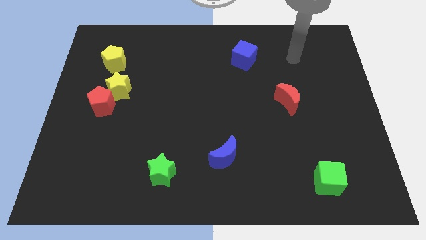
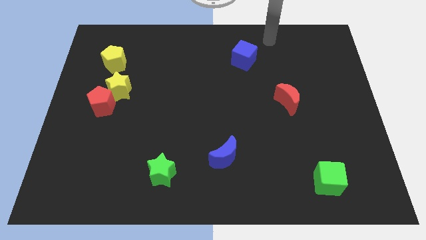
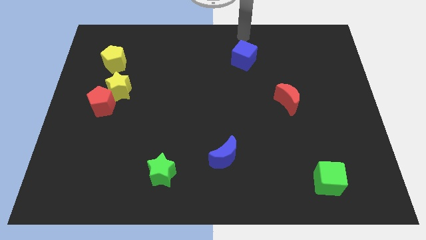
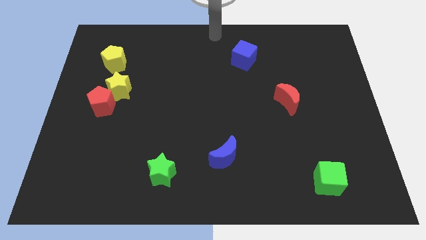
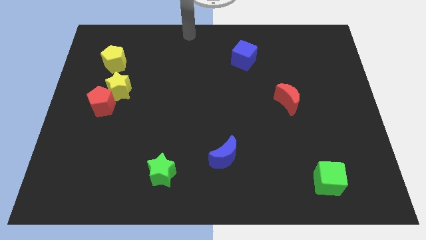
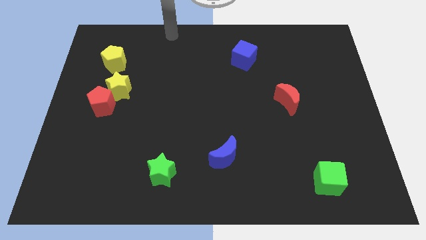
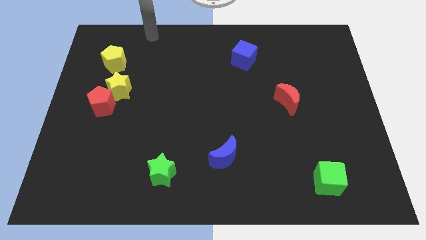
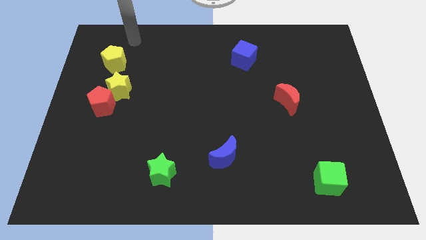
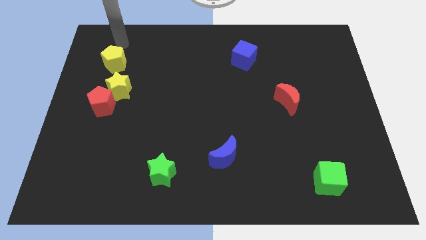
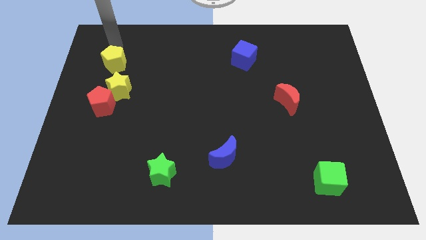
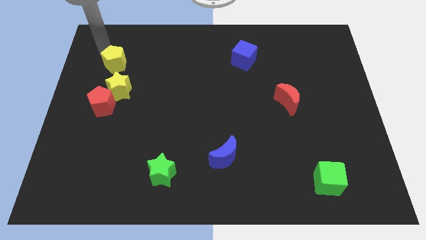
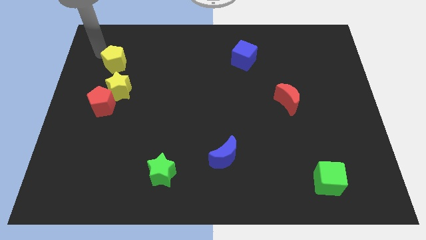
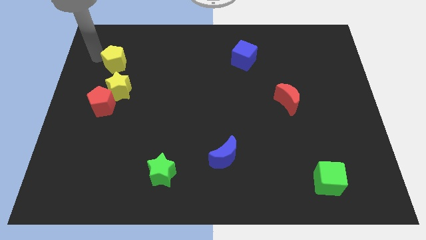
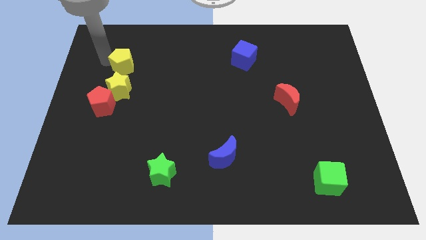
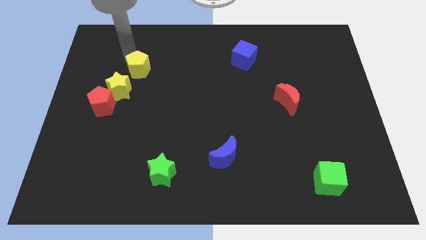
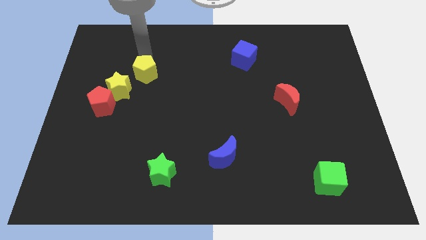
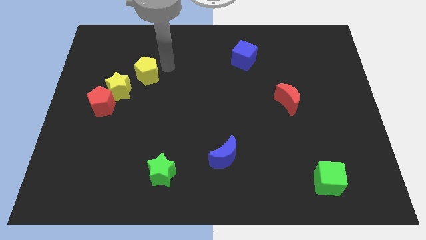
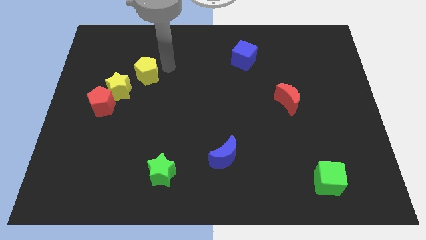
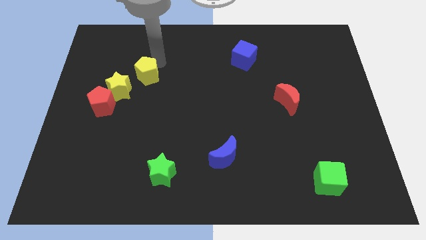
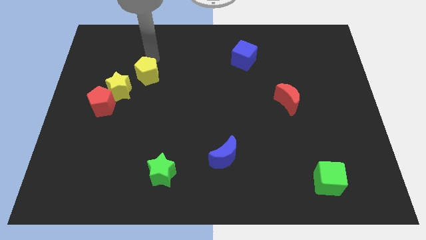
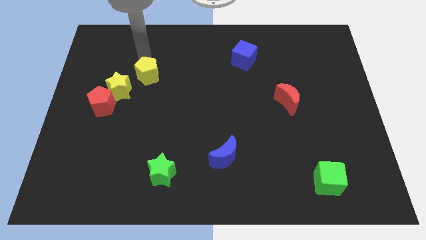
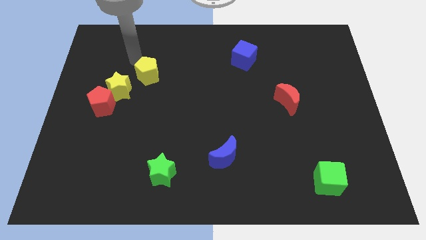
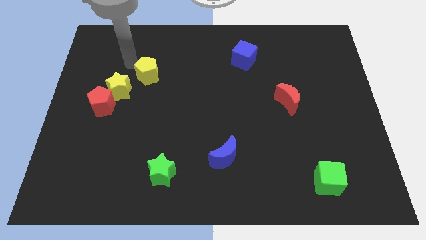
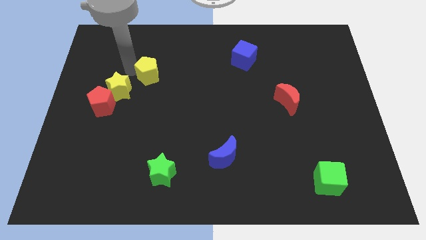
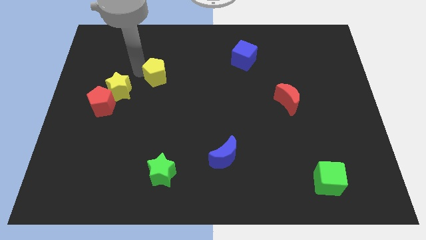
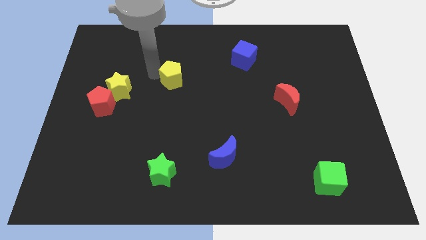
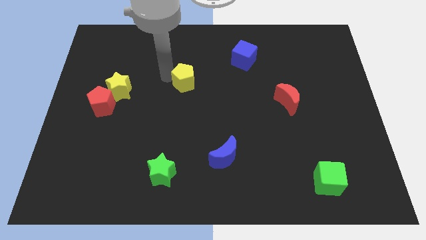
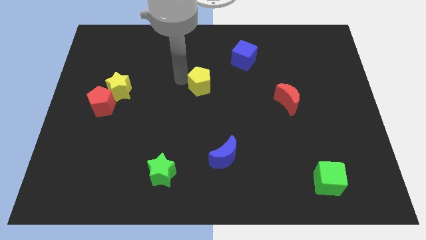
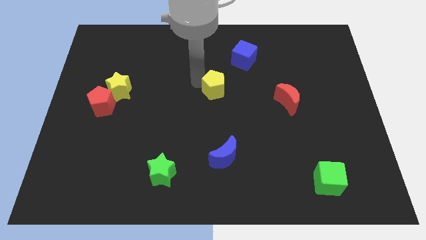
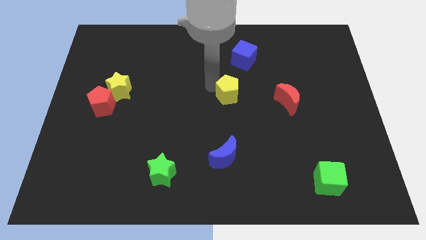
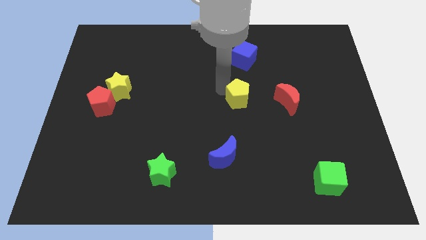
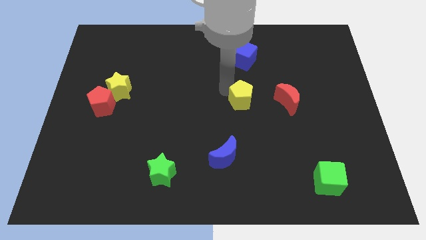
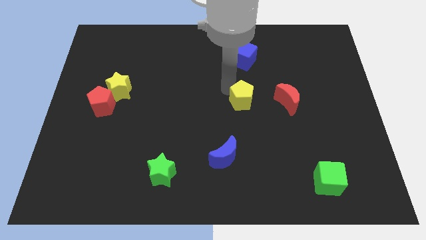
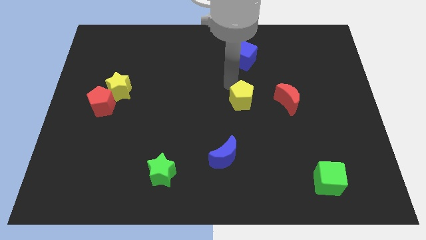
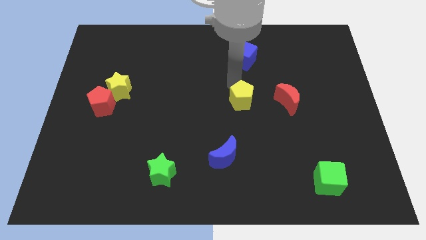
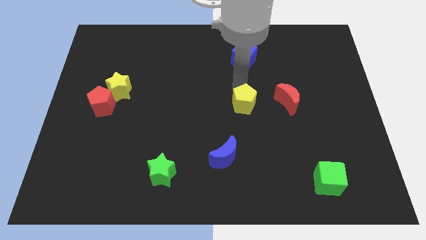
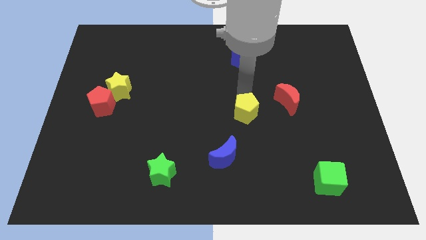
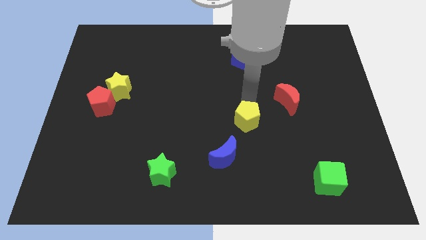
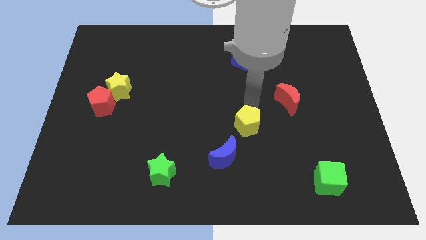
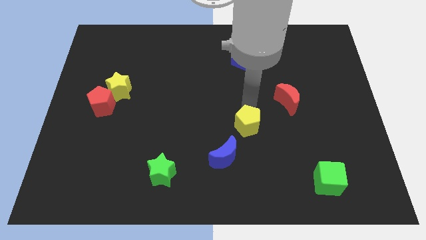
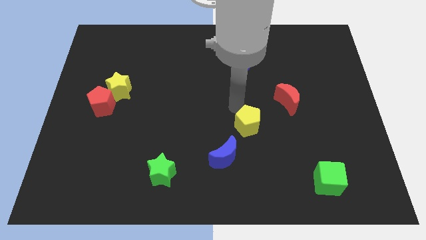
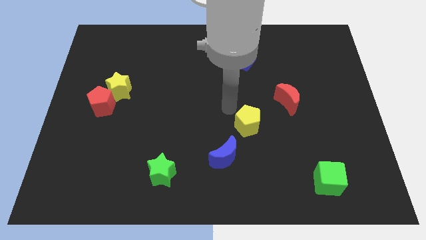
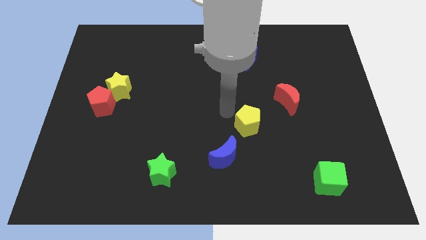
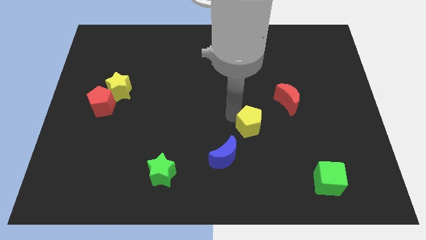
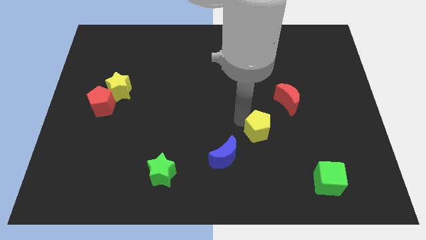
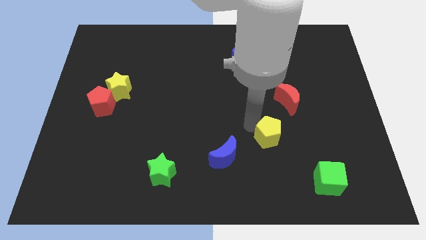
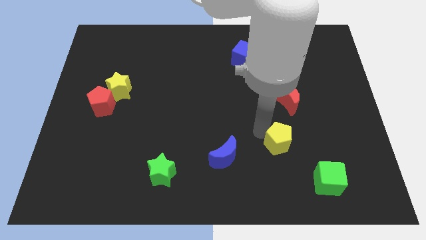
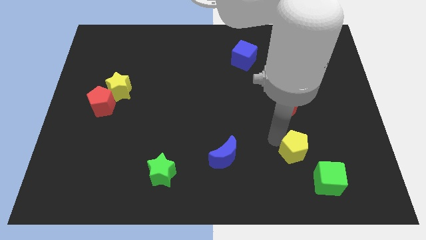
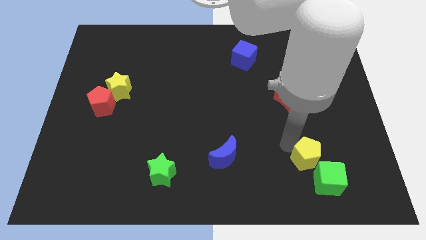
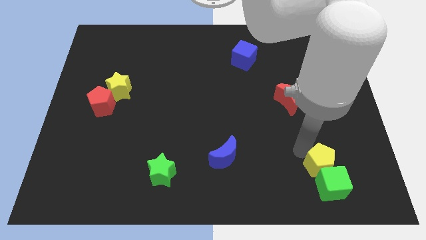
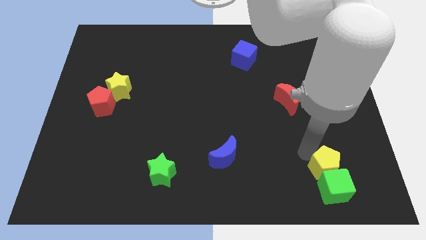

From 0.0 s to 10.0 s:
push the yellow pentagon to the green cube

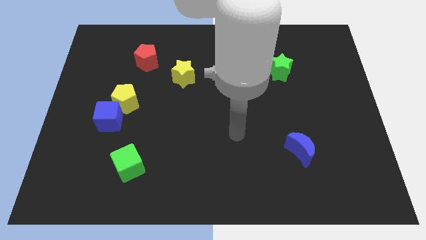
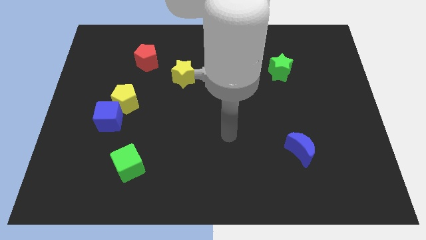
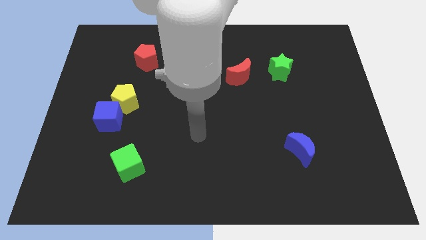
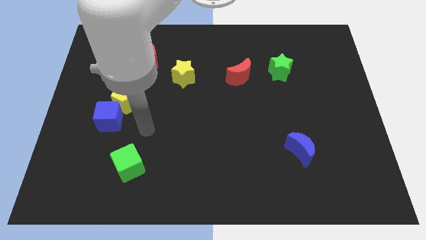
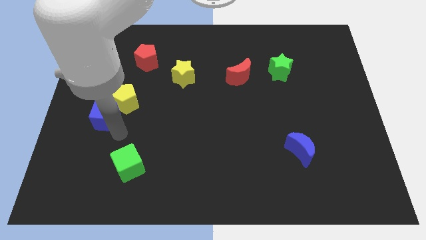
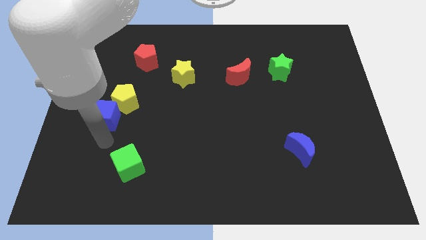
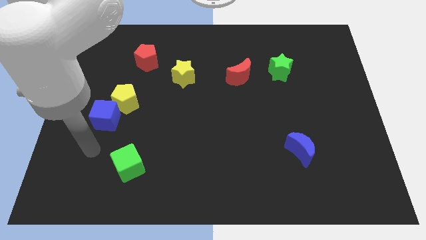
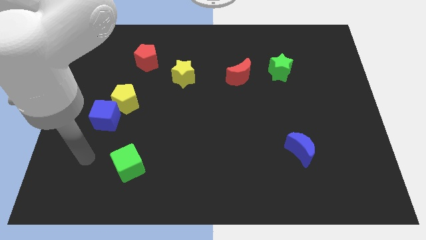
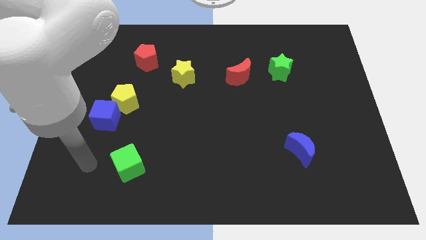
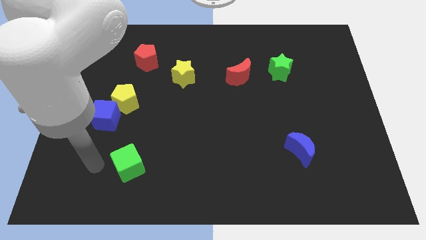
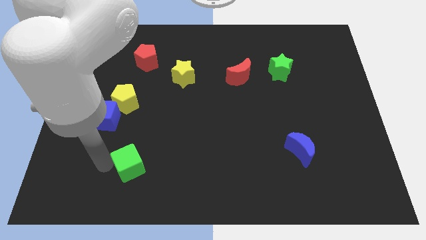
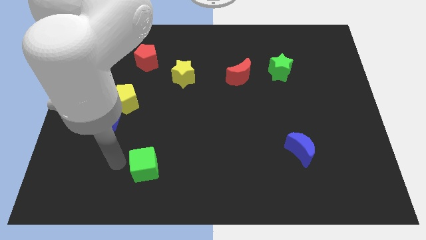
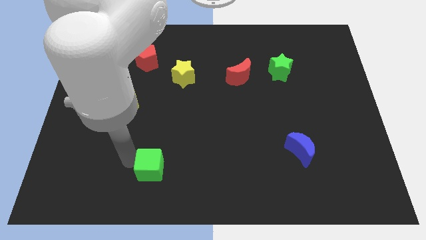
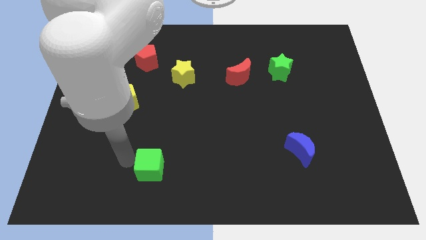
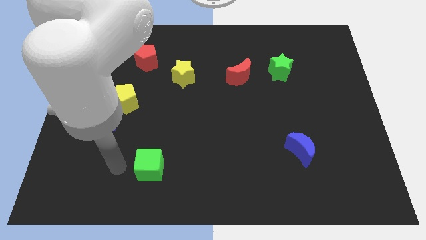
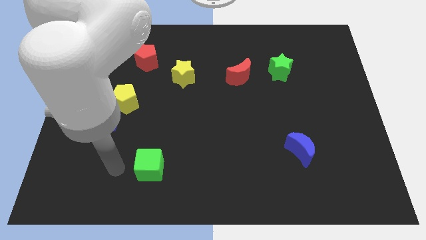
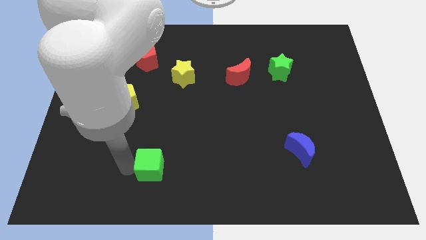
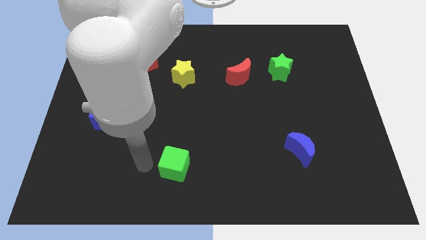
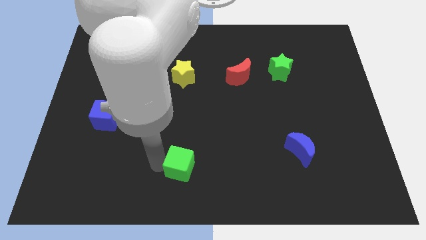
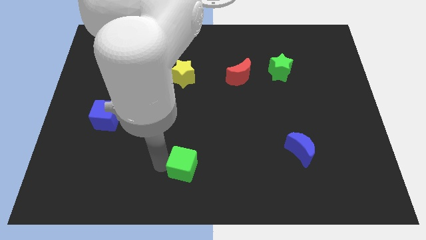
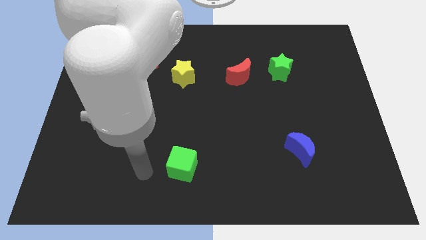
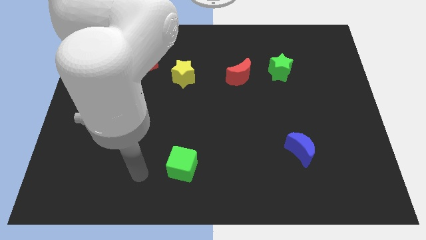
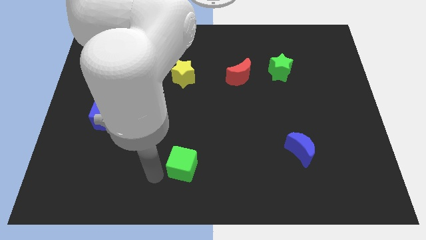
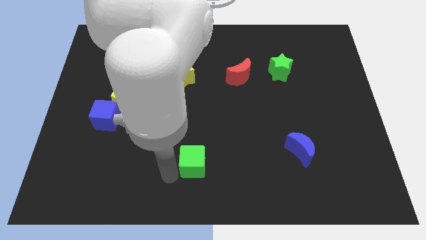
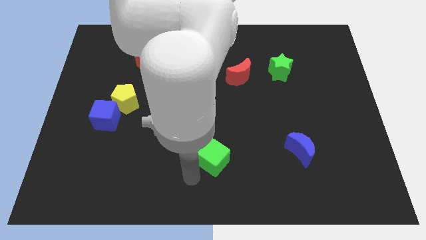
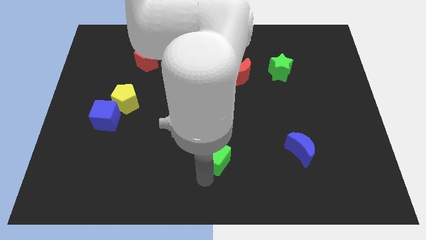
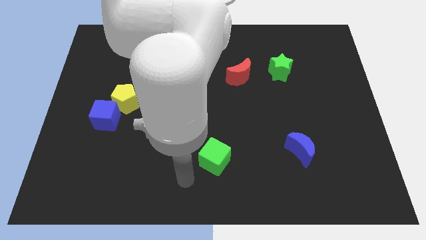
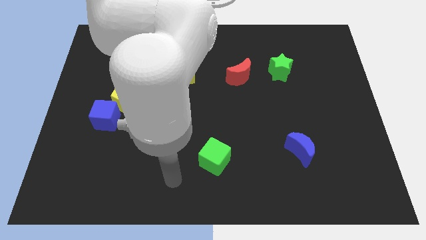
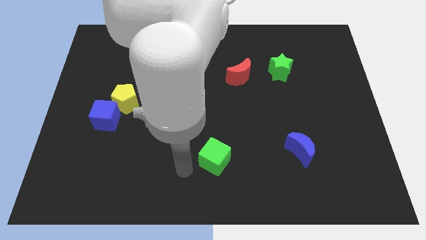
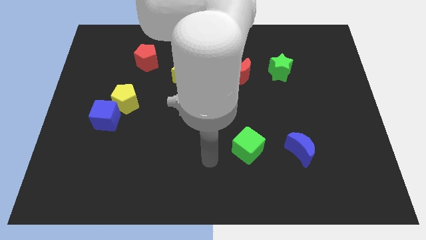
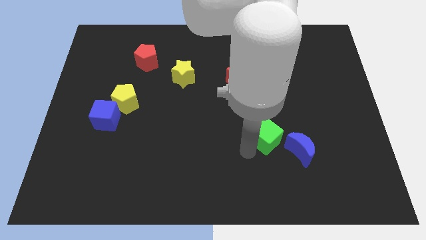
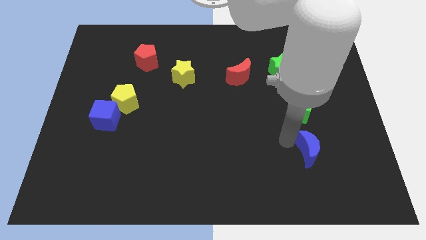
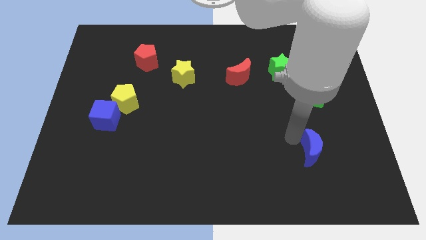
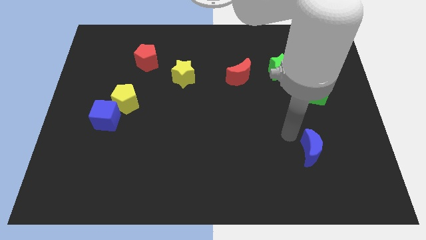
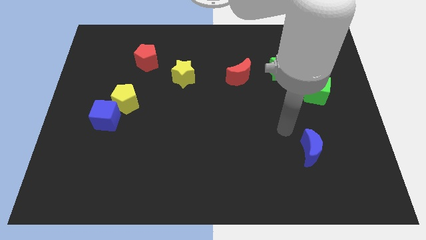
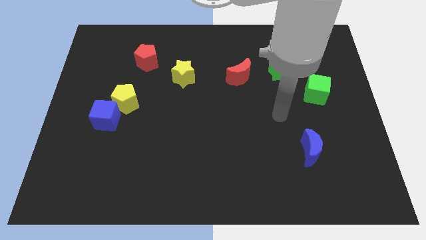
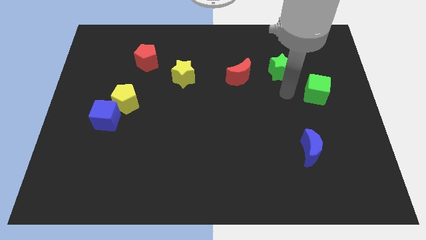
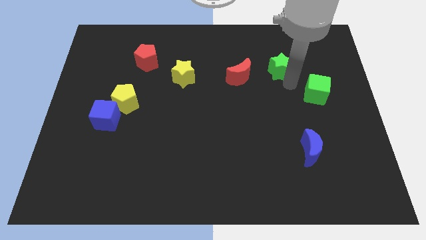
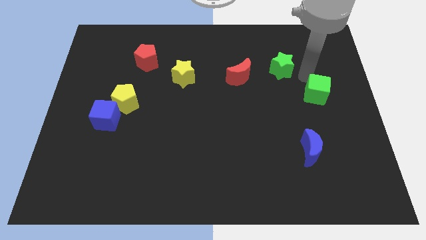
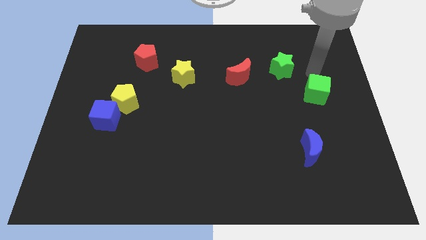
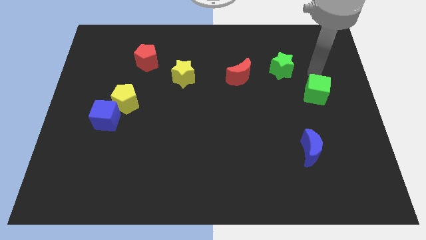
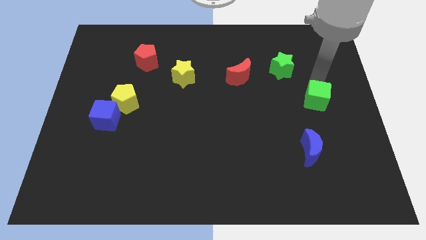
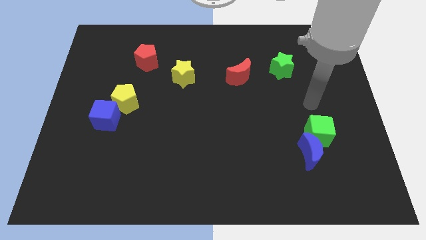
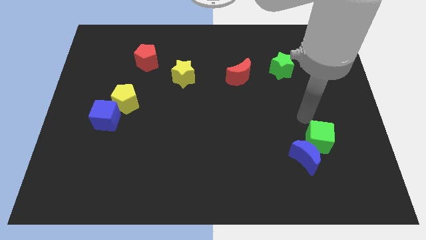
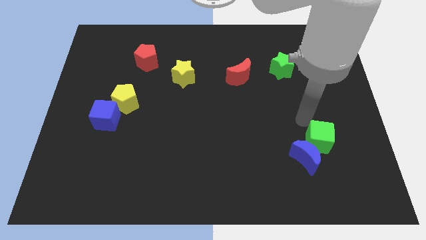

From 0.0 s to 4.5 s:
push the green cube towards the blue moon
